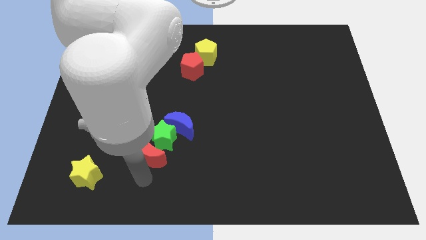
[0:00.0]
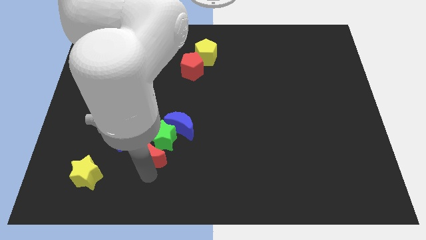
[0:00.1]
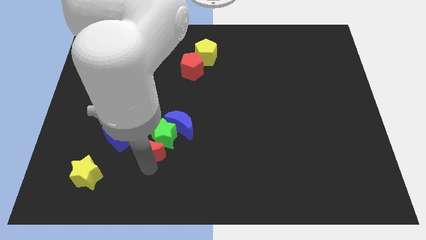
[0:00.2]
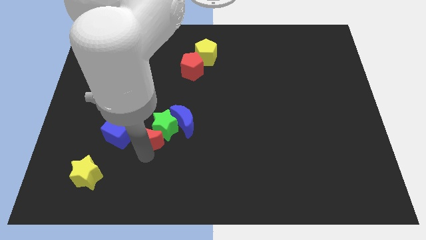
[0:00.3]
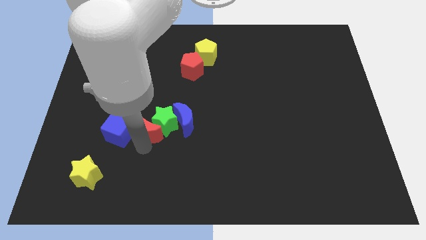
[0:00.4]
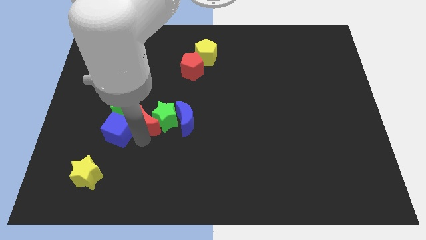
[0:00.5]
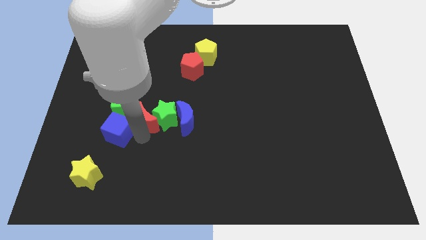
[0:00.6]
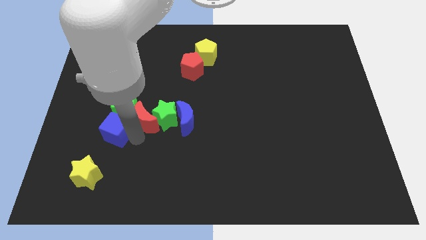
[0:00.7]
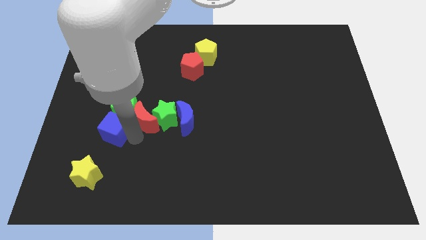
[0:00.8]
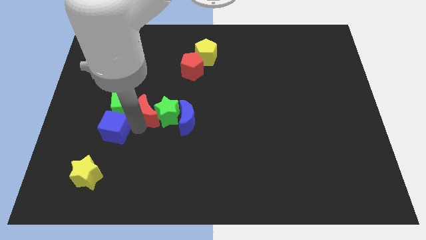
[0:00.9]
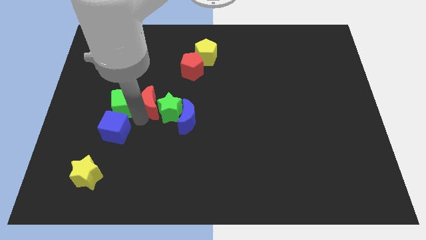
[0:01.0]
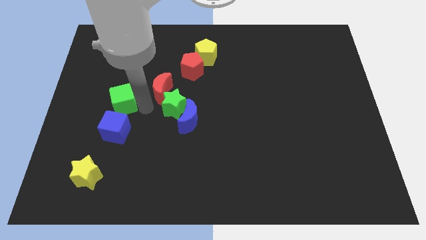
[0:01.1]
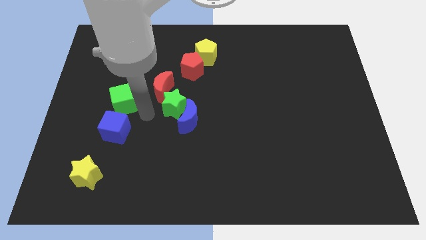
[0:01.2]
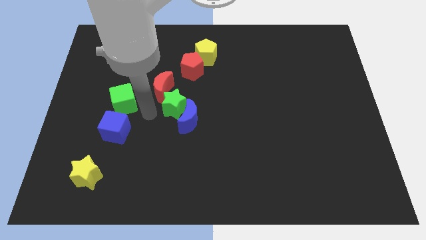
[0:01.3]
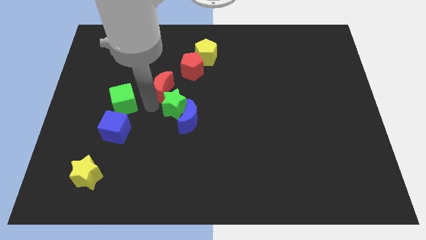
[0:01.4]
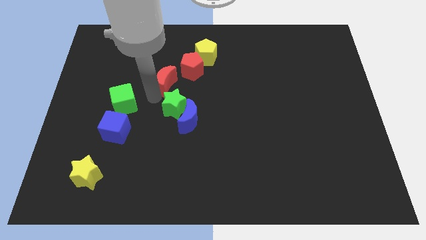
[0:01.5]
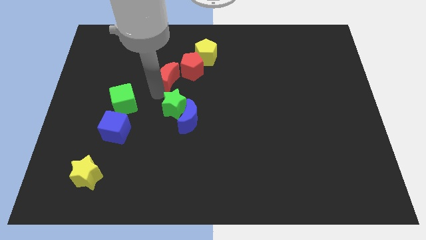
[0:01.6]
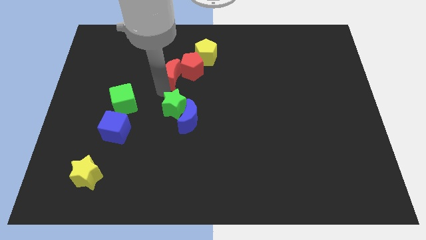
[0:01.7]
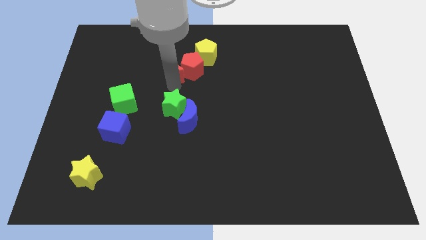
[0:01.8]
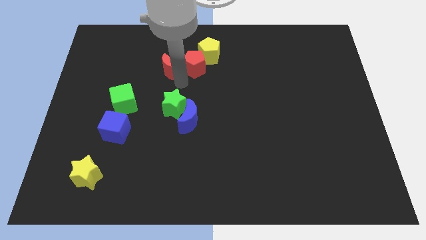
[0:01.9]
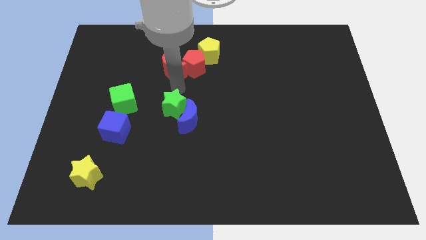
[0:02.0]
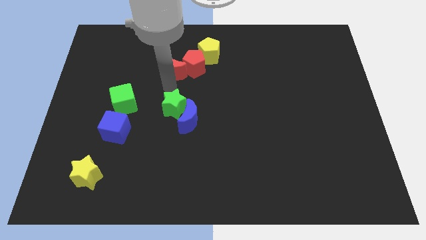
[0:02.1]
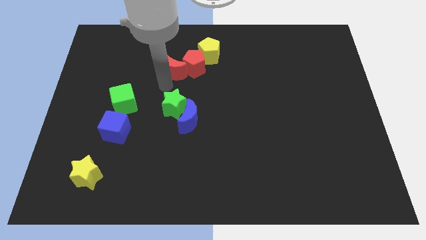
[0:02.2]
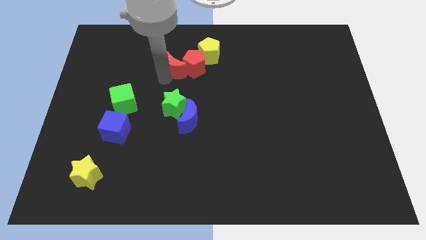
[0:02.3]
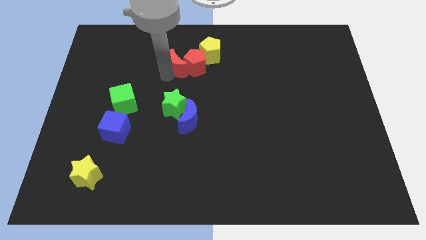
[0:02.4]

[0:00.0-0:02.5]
move the red crescent to the left of the red pentagon

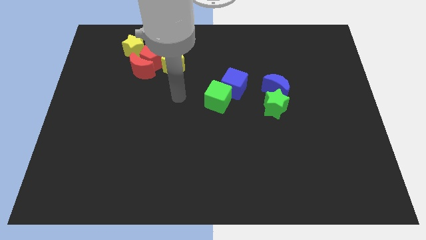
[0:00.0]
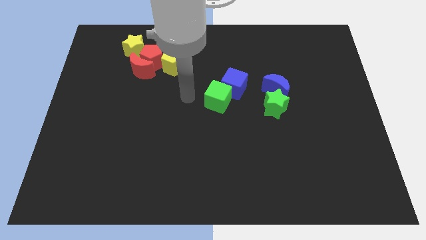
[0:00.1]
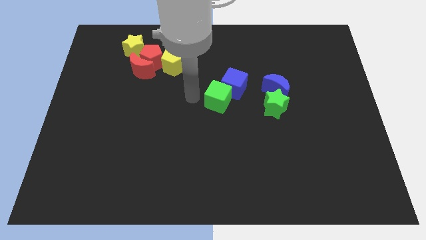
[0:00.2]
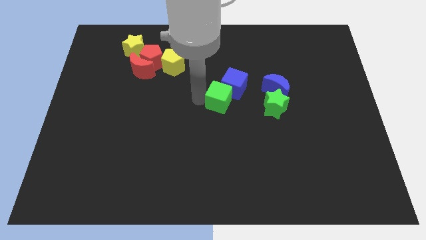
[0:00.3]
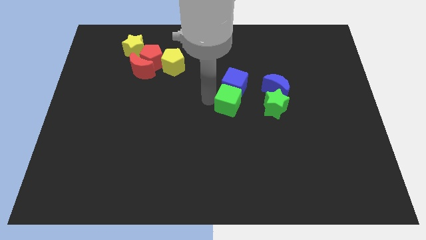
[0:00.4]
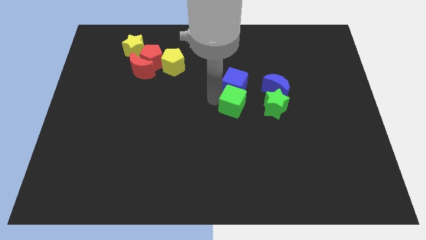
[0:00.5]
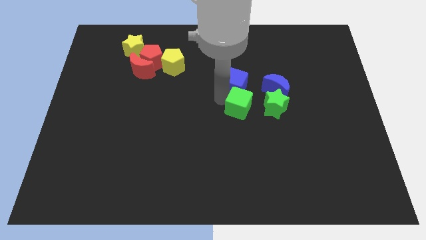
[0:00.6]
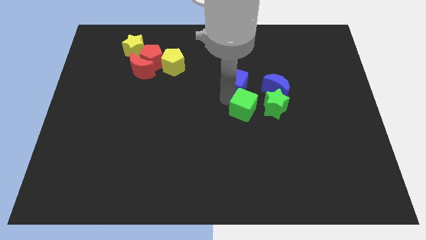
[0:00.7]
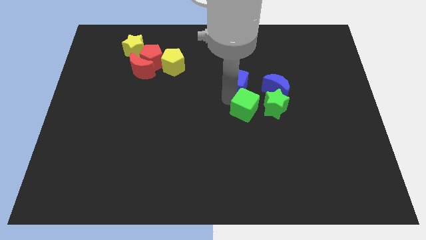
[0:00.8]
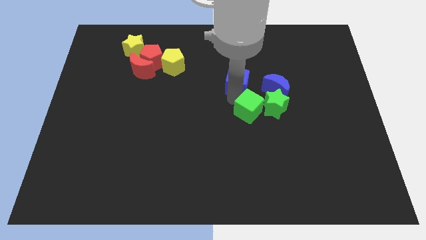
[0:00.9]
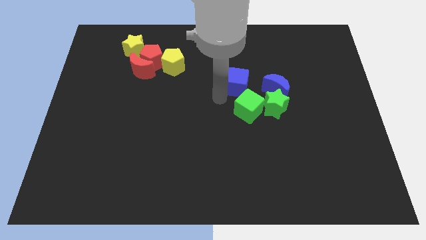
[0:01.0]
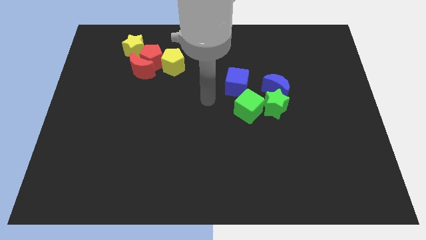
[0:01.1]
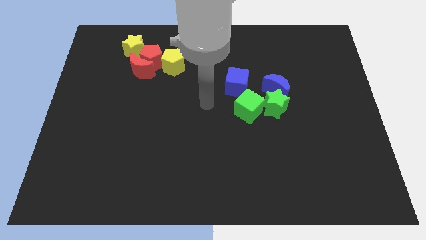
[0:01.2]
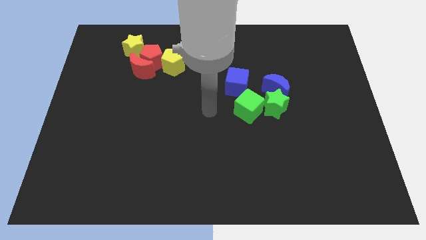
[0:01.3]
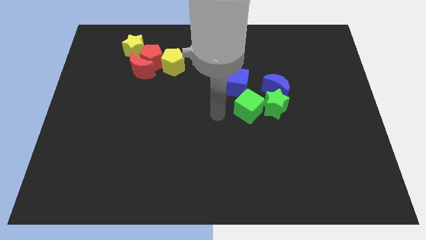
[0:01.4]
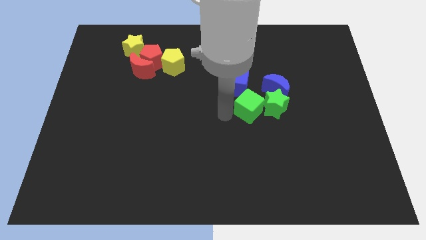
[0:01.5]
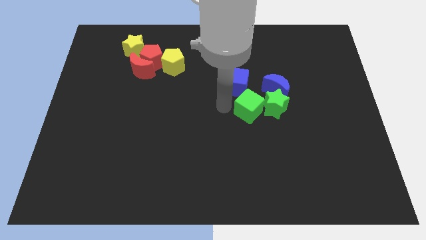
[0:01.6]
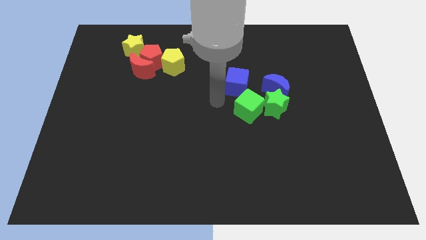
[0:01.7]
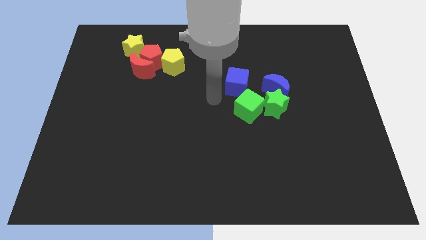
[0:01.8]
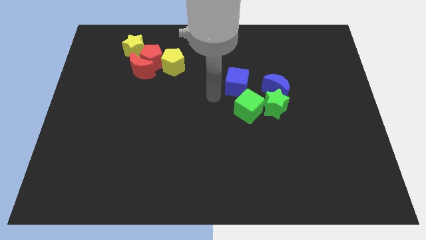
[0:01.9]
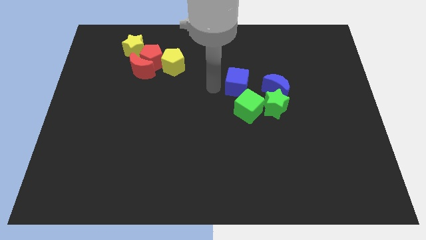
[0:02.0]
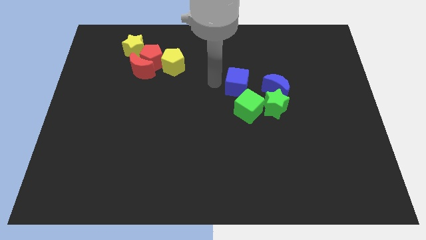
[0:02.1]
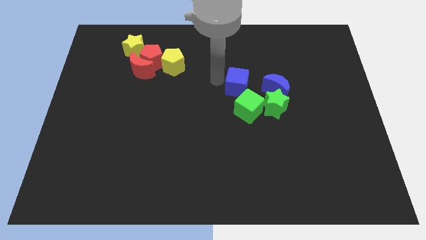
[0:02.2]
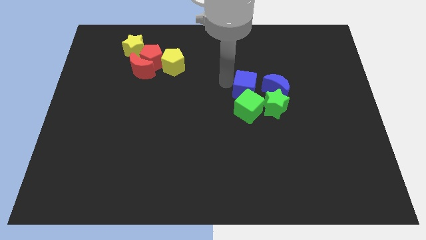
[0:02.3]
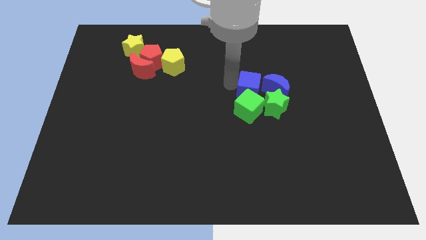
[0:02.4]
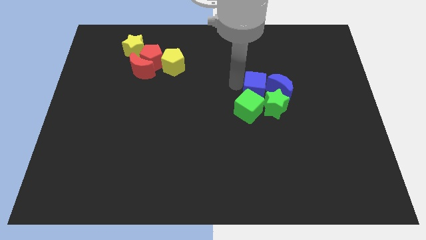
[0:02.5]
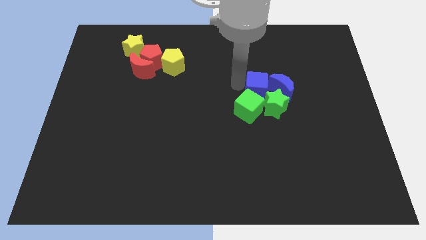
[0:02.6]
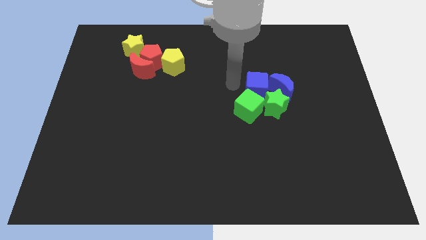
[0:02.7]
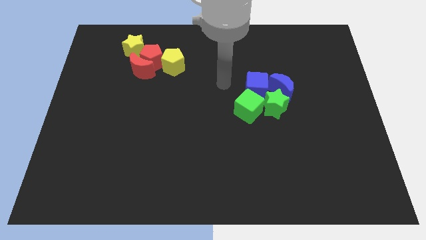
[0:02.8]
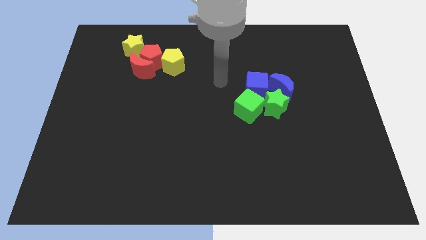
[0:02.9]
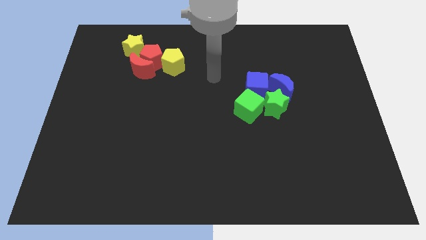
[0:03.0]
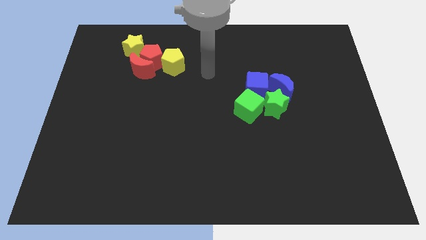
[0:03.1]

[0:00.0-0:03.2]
group up the green and blue blocks together at the center of the board

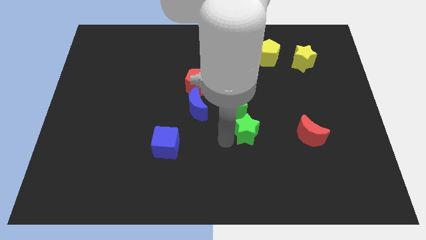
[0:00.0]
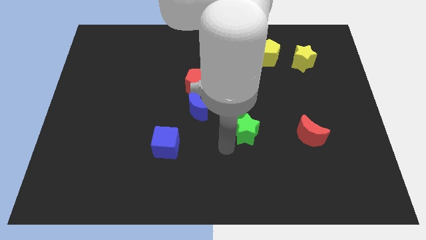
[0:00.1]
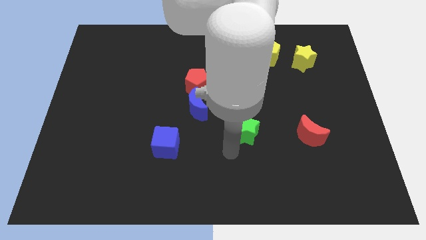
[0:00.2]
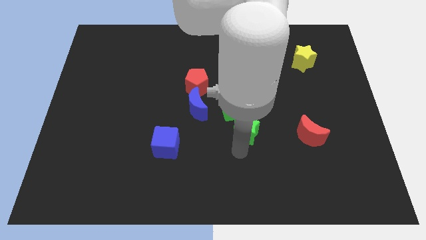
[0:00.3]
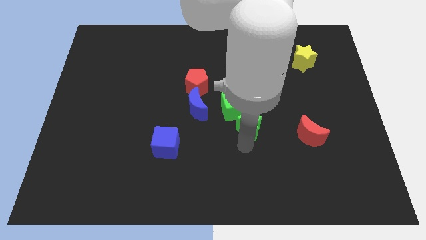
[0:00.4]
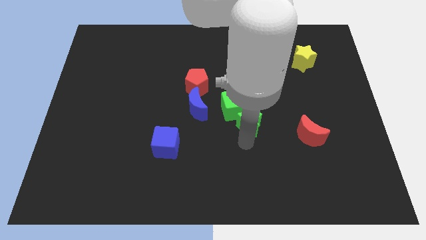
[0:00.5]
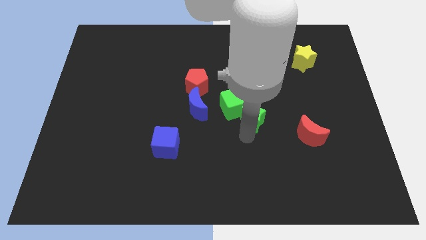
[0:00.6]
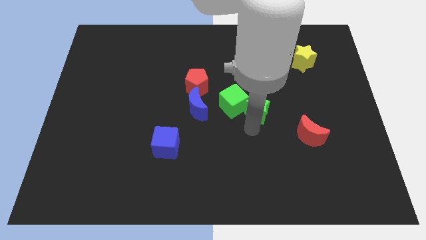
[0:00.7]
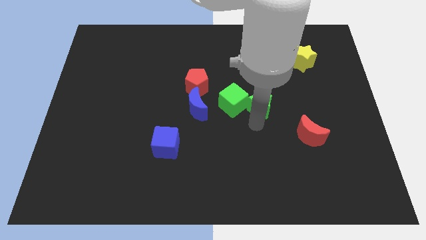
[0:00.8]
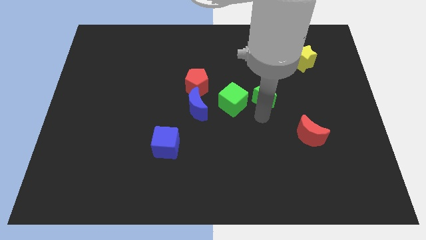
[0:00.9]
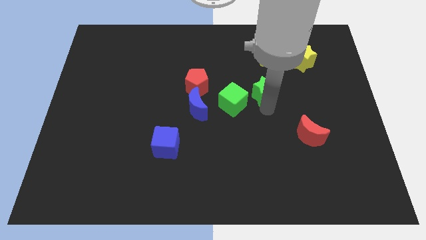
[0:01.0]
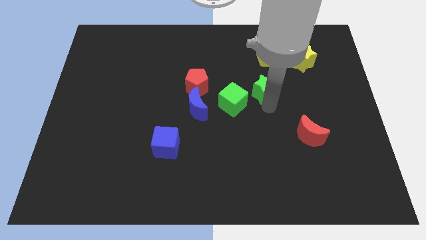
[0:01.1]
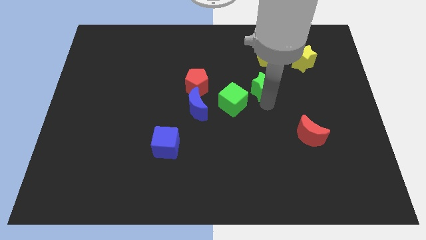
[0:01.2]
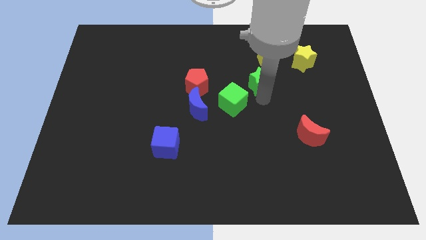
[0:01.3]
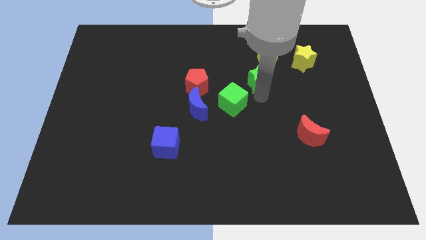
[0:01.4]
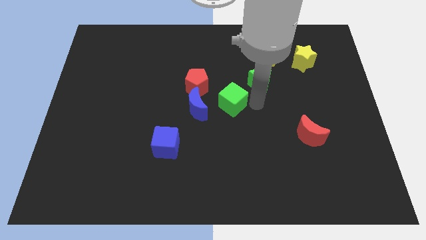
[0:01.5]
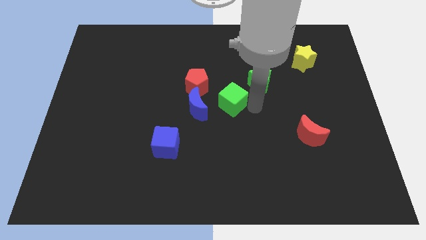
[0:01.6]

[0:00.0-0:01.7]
move the green star towards the yellow pentagon

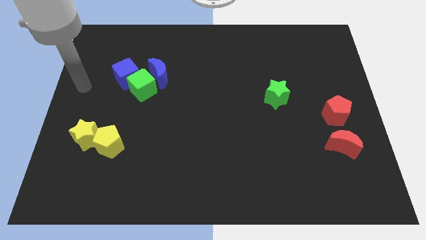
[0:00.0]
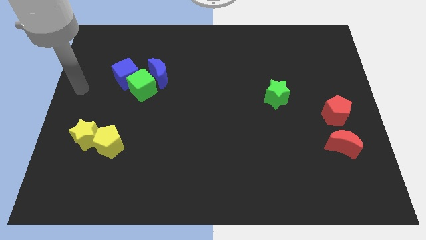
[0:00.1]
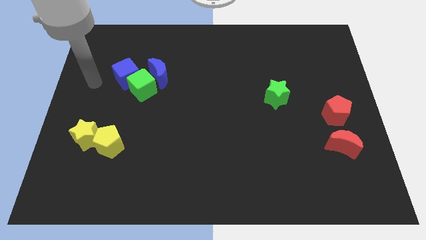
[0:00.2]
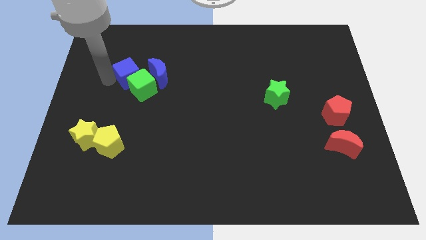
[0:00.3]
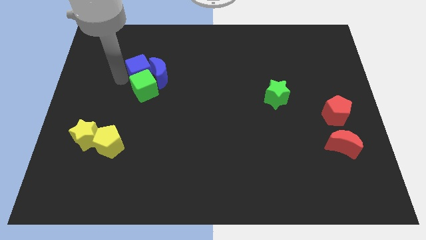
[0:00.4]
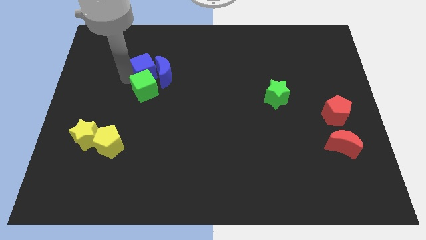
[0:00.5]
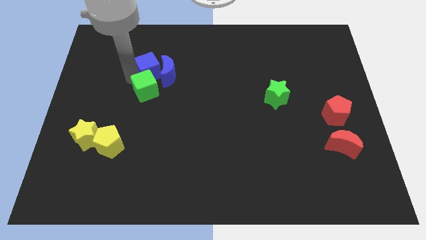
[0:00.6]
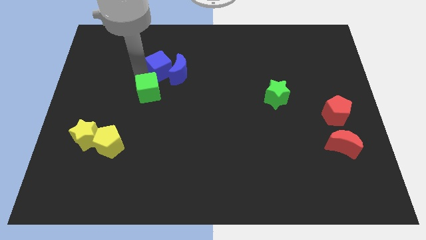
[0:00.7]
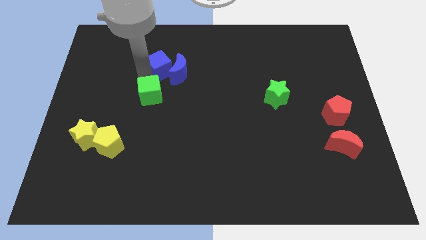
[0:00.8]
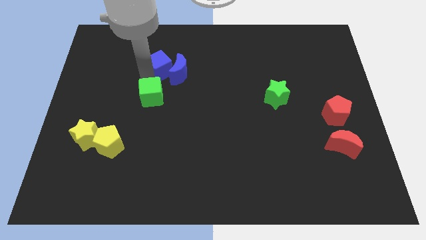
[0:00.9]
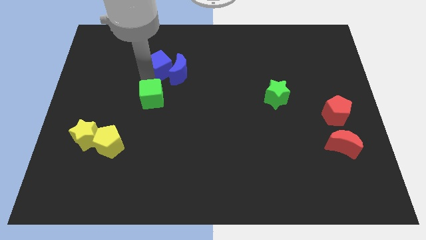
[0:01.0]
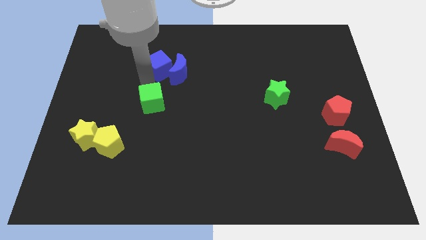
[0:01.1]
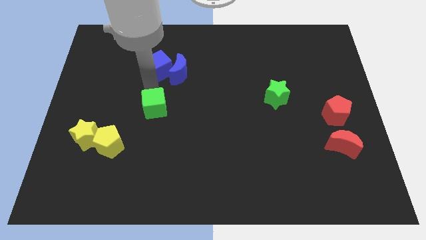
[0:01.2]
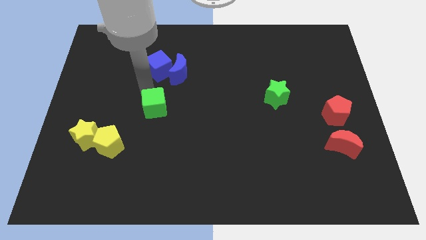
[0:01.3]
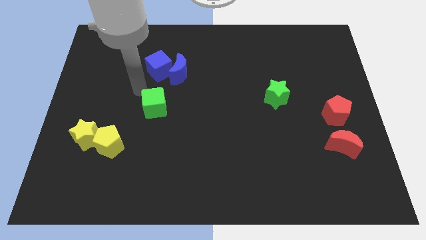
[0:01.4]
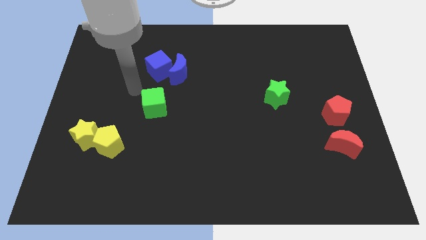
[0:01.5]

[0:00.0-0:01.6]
separate the green cube and blue cube
